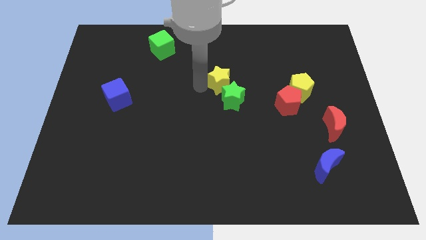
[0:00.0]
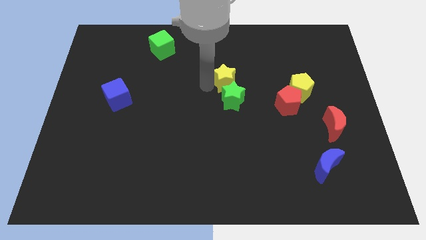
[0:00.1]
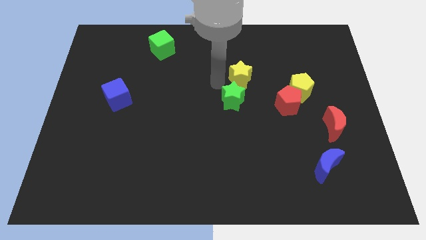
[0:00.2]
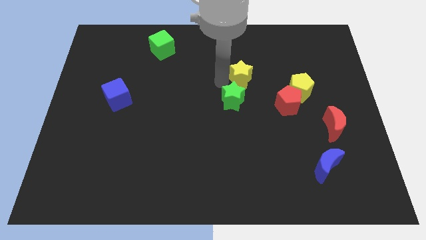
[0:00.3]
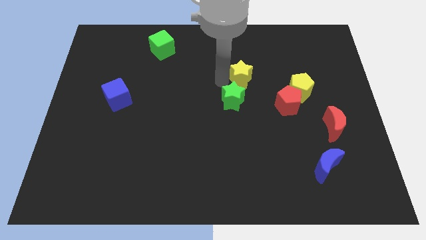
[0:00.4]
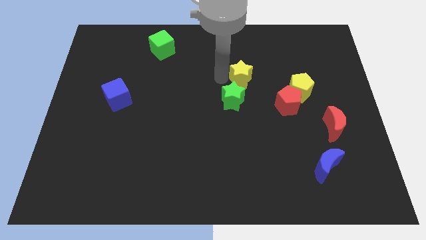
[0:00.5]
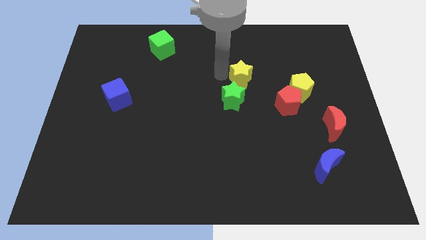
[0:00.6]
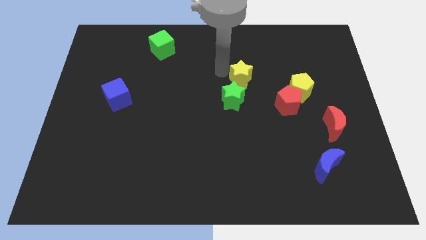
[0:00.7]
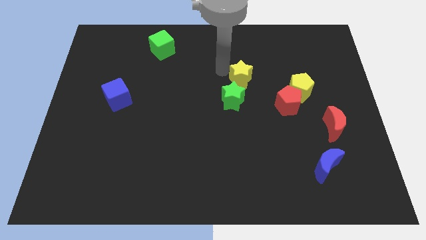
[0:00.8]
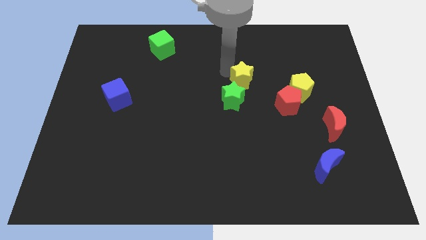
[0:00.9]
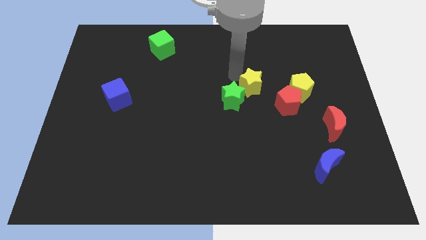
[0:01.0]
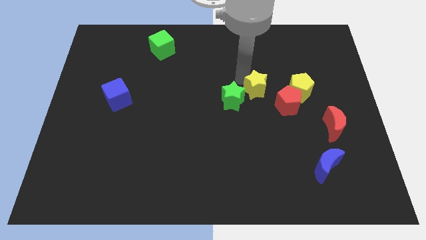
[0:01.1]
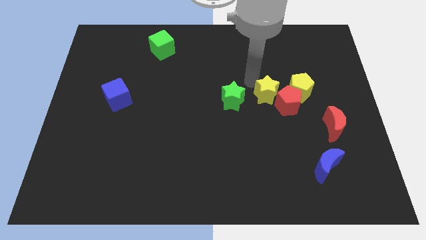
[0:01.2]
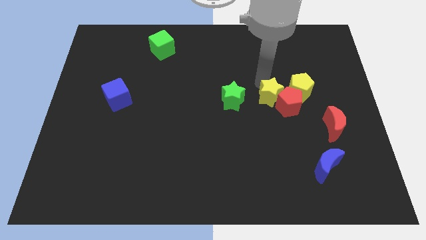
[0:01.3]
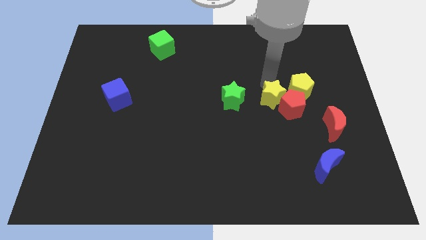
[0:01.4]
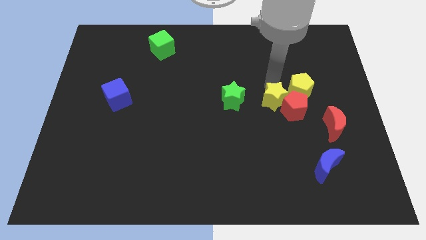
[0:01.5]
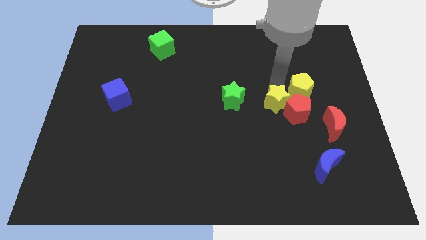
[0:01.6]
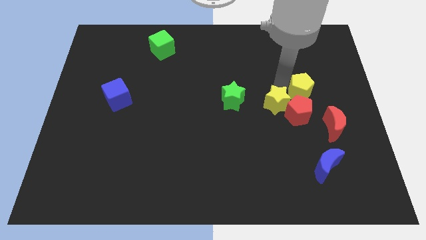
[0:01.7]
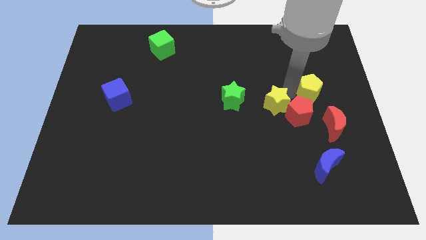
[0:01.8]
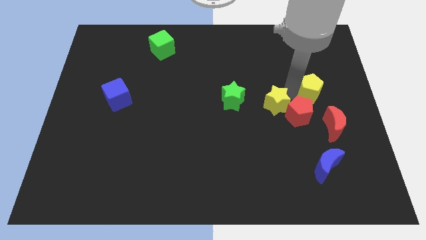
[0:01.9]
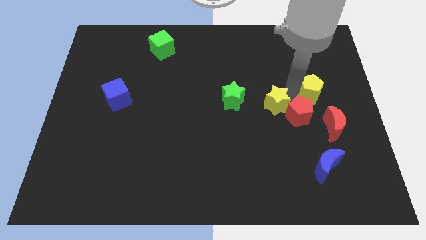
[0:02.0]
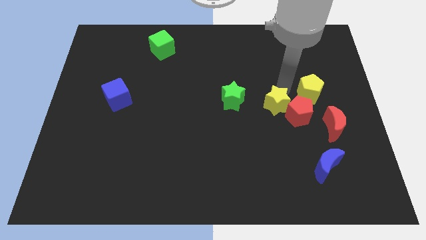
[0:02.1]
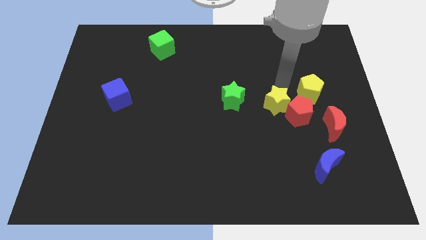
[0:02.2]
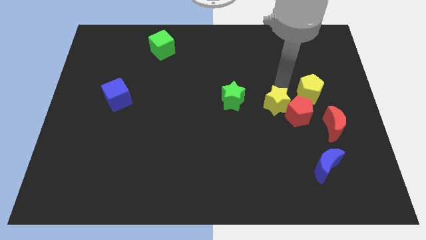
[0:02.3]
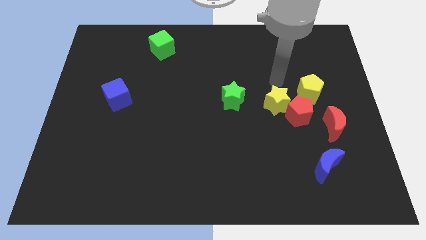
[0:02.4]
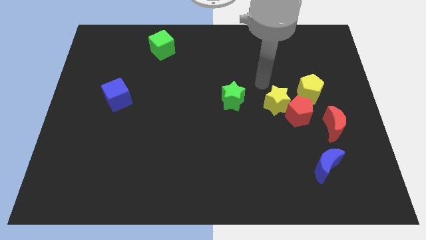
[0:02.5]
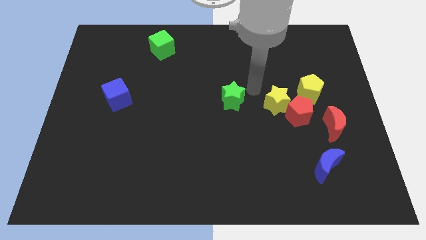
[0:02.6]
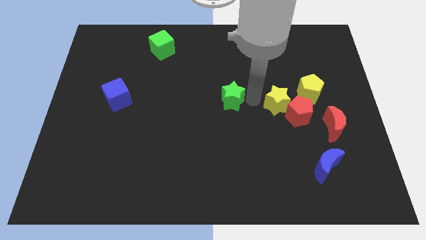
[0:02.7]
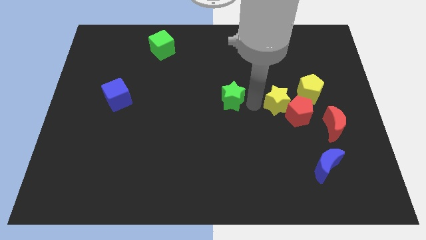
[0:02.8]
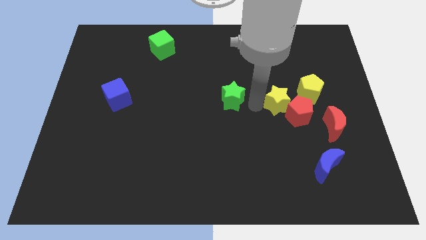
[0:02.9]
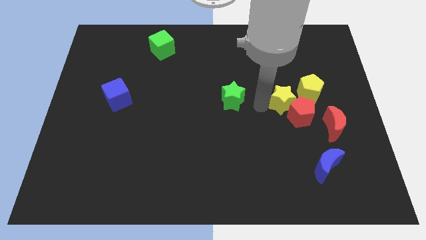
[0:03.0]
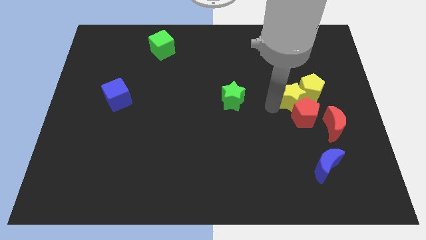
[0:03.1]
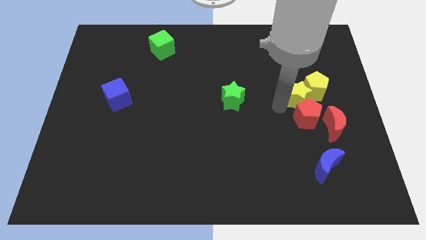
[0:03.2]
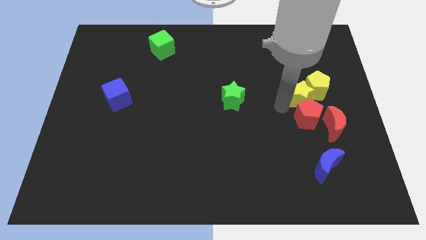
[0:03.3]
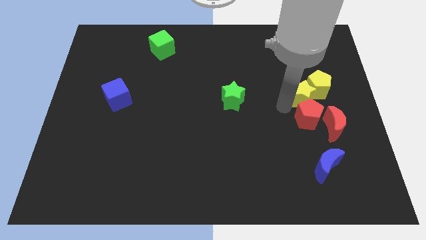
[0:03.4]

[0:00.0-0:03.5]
push the yellow star to the left of the yellow pentagon

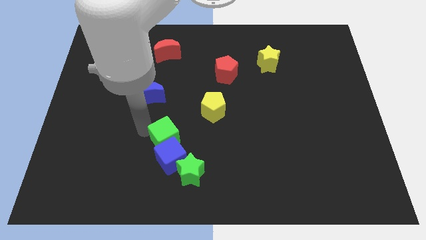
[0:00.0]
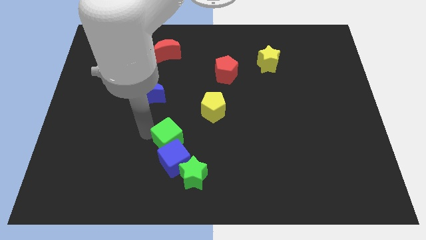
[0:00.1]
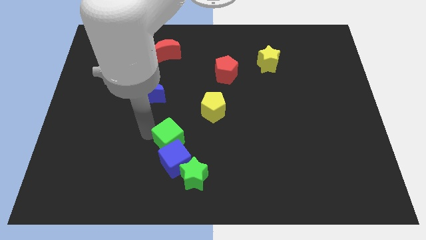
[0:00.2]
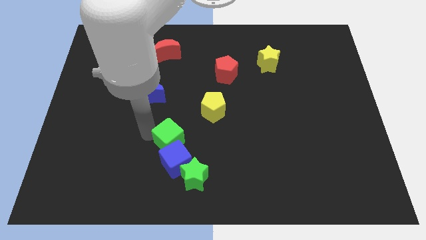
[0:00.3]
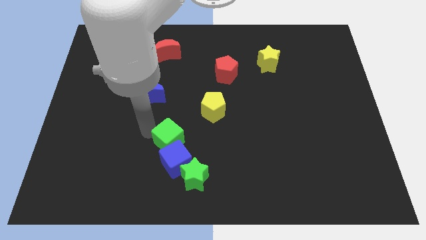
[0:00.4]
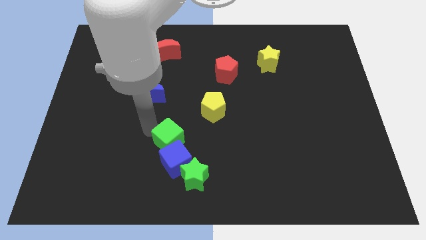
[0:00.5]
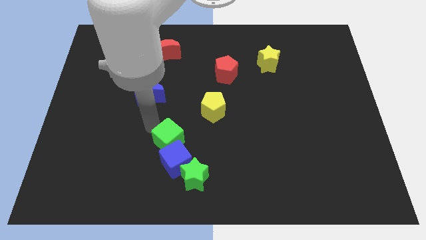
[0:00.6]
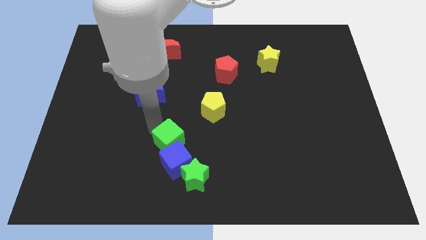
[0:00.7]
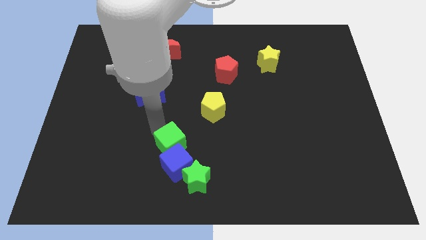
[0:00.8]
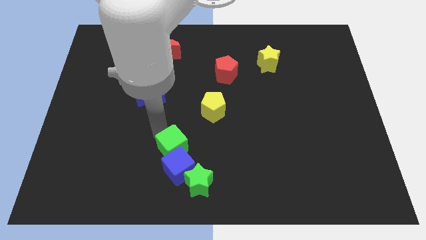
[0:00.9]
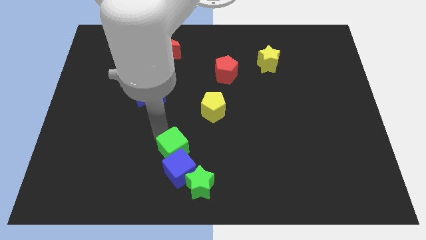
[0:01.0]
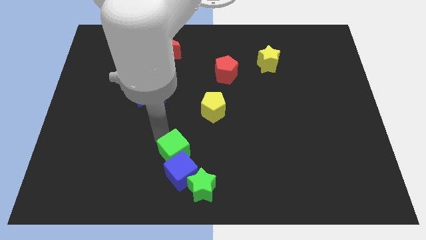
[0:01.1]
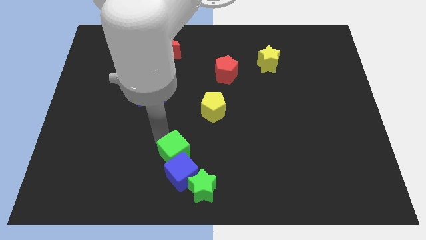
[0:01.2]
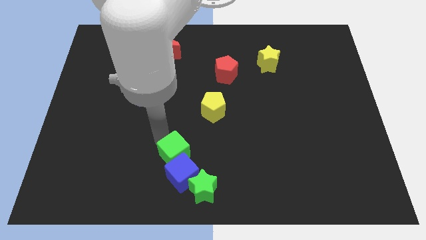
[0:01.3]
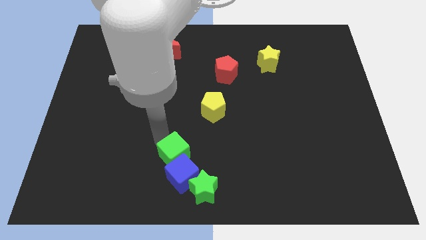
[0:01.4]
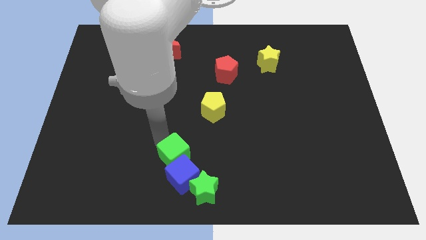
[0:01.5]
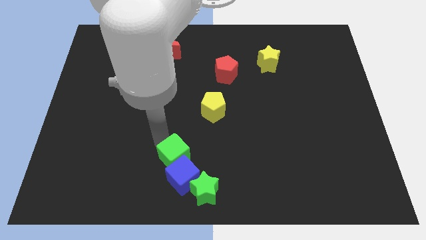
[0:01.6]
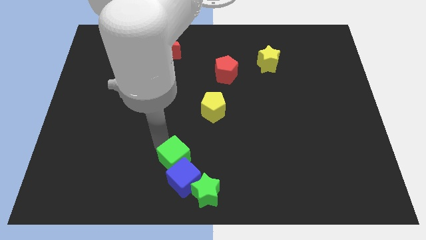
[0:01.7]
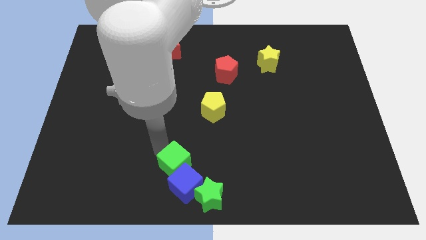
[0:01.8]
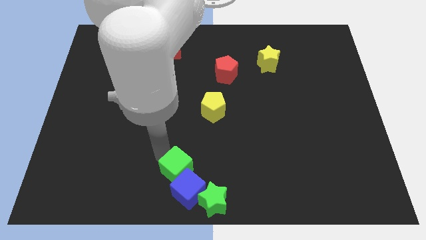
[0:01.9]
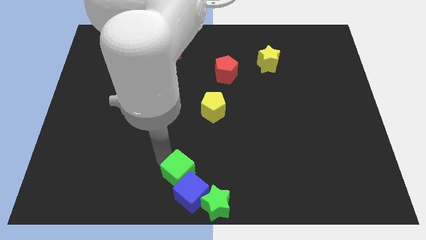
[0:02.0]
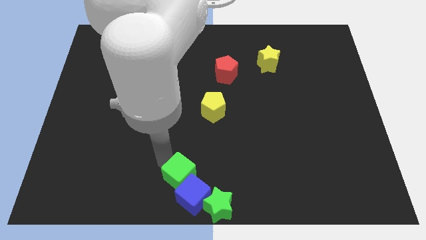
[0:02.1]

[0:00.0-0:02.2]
move green cubes and blue cube in the bottom center

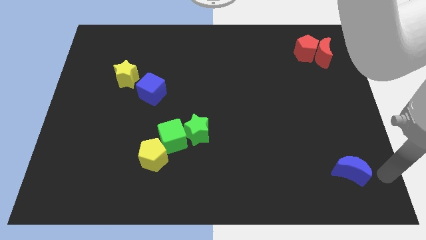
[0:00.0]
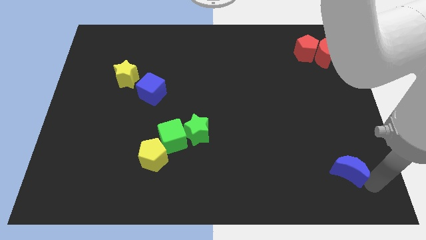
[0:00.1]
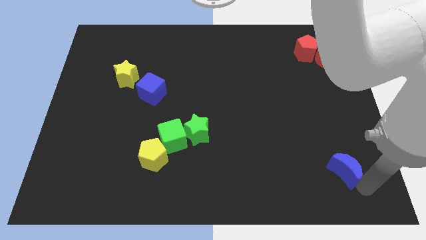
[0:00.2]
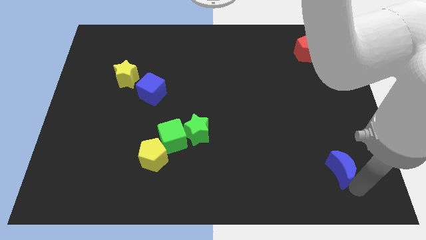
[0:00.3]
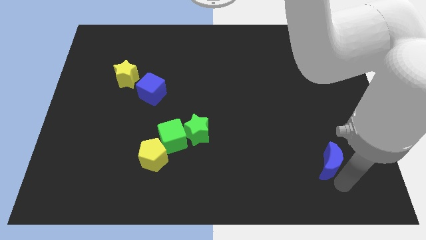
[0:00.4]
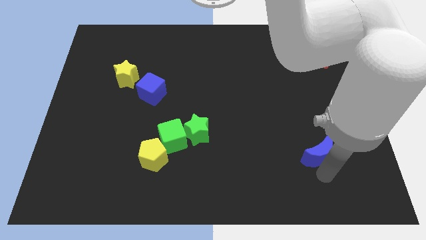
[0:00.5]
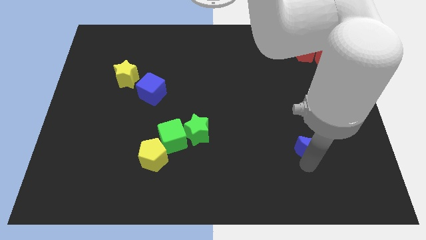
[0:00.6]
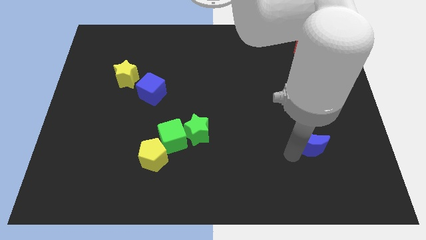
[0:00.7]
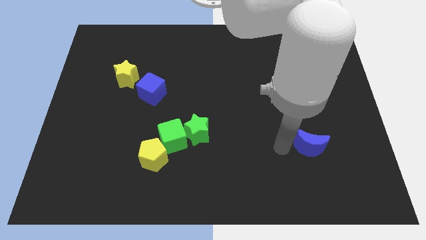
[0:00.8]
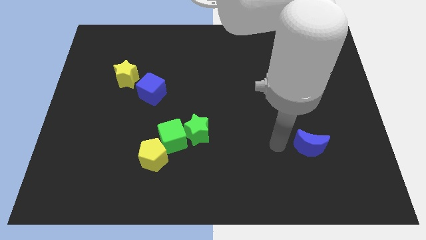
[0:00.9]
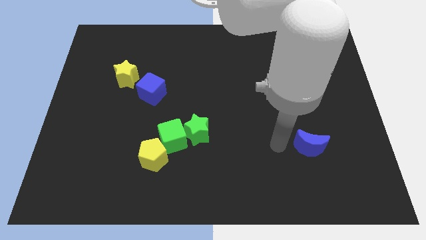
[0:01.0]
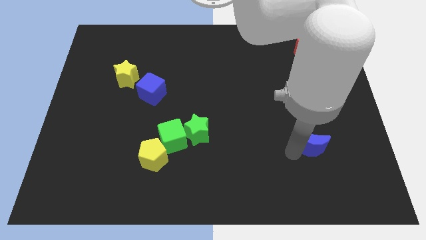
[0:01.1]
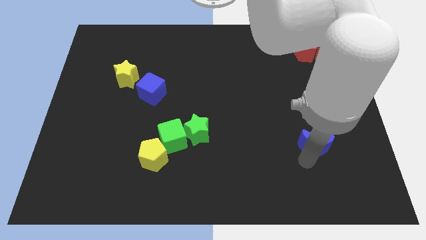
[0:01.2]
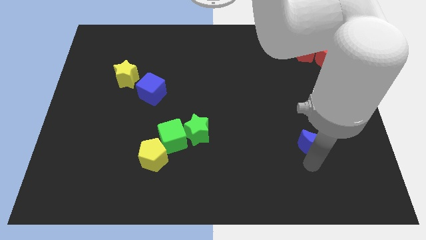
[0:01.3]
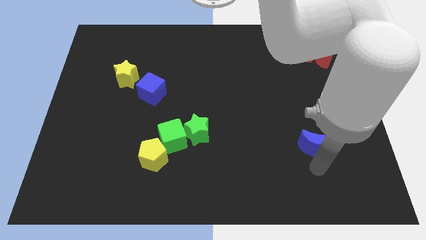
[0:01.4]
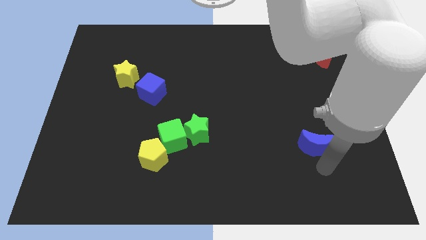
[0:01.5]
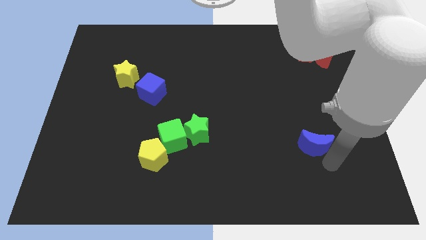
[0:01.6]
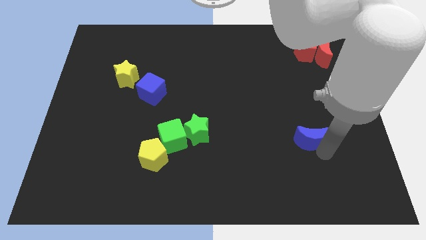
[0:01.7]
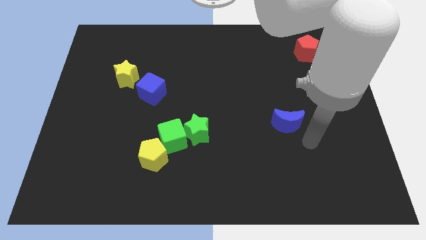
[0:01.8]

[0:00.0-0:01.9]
move the blue crescent parallel to the green star

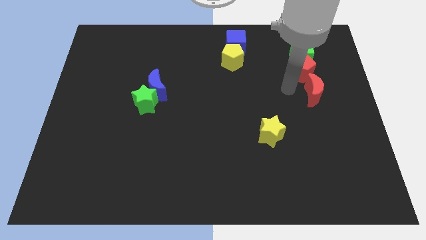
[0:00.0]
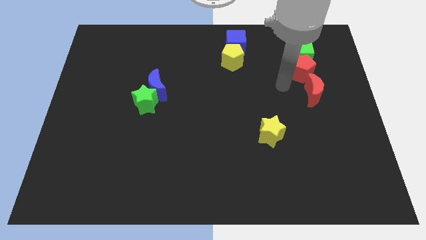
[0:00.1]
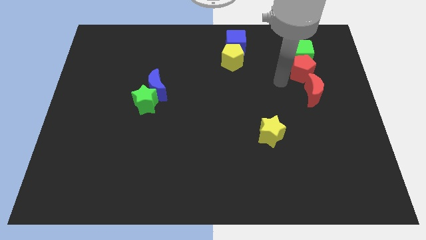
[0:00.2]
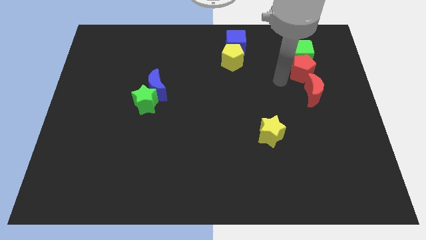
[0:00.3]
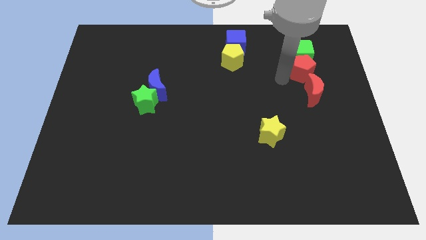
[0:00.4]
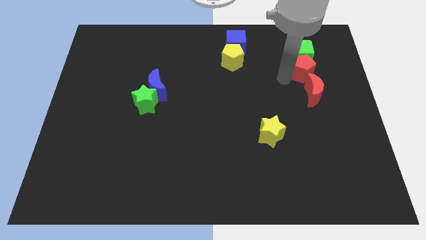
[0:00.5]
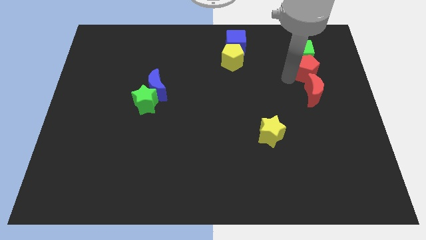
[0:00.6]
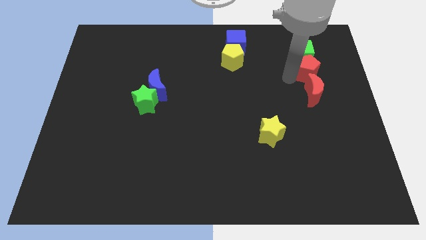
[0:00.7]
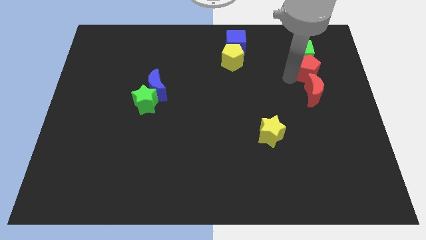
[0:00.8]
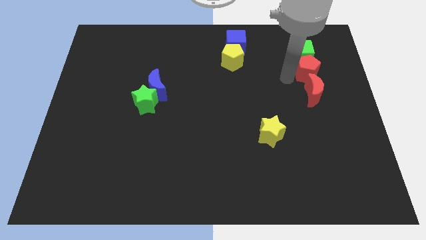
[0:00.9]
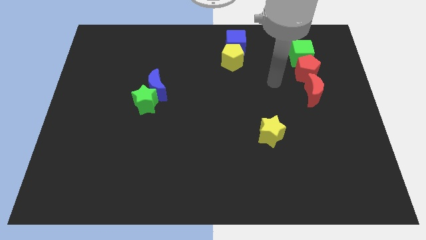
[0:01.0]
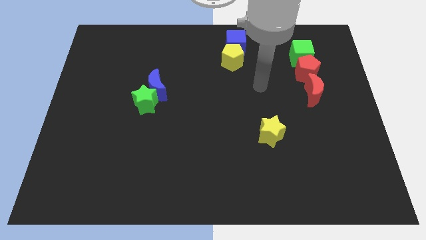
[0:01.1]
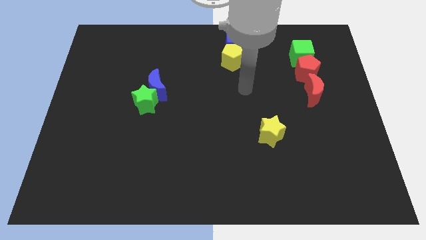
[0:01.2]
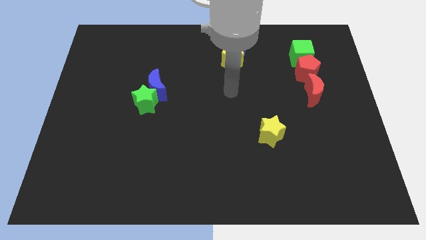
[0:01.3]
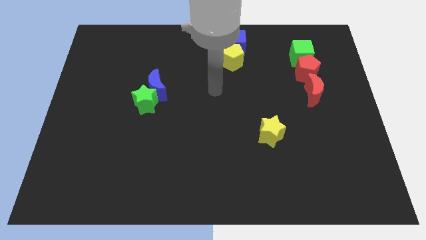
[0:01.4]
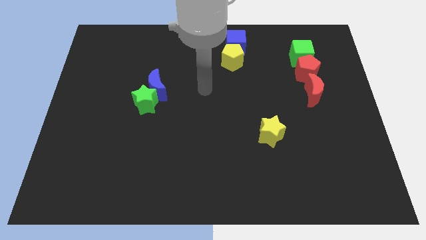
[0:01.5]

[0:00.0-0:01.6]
move red pentagon slightly right
